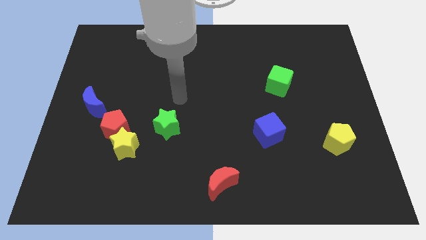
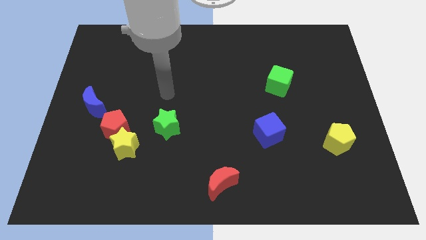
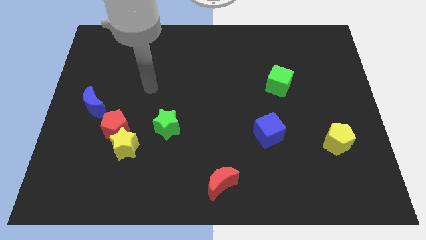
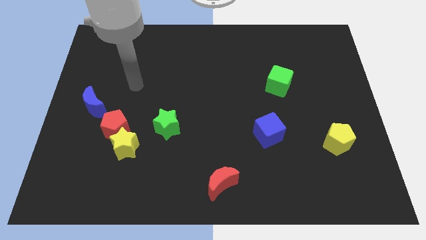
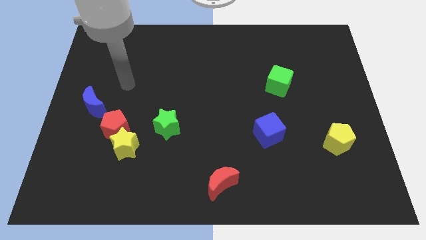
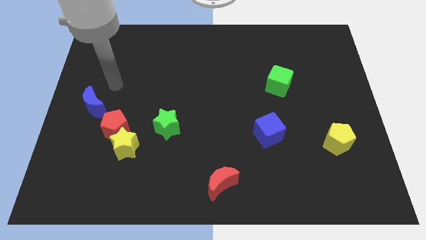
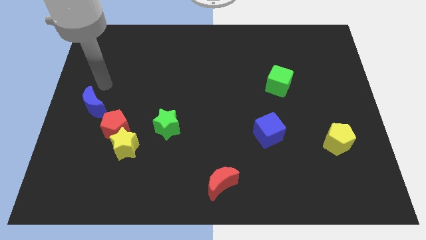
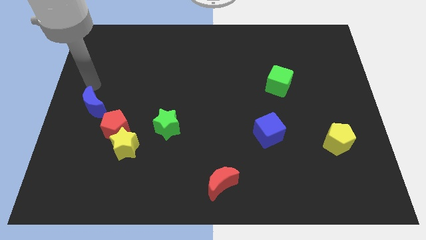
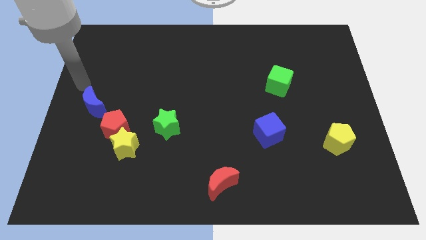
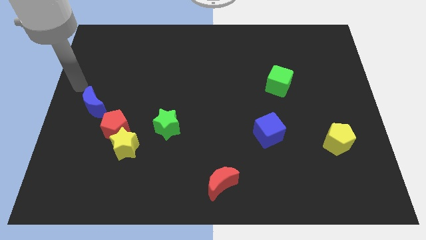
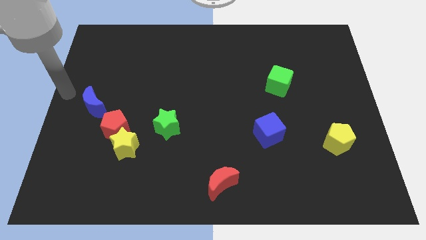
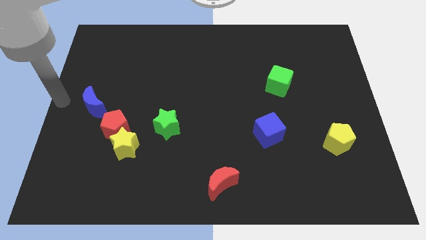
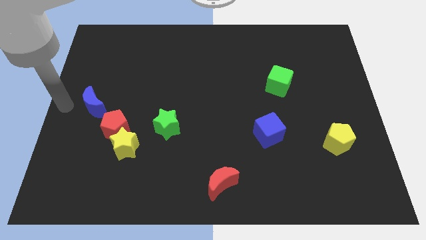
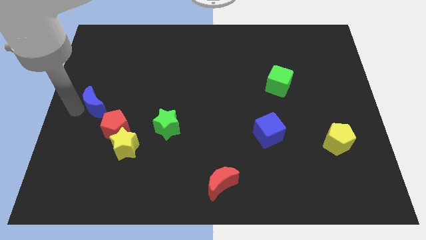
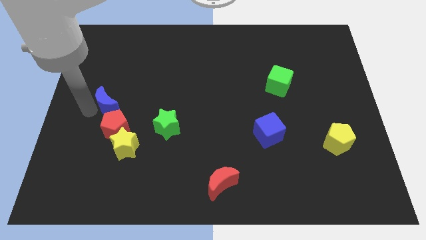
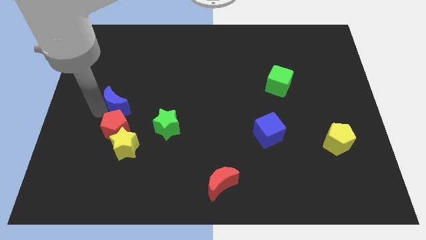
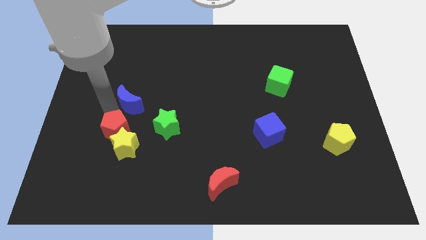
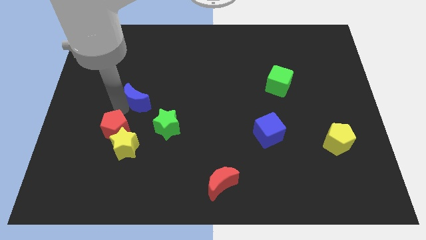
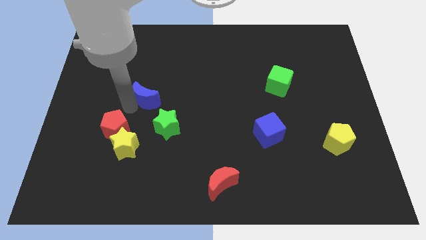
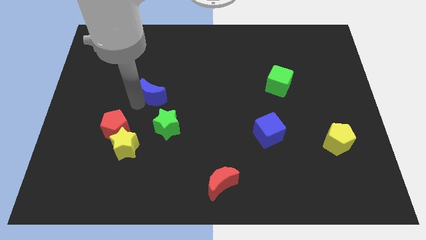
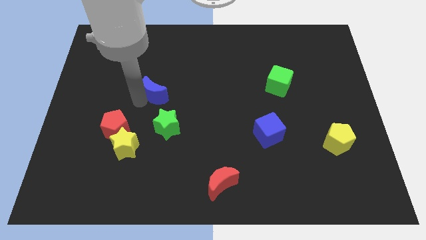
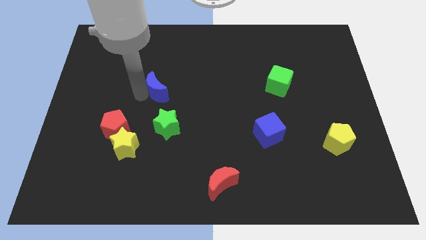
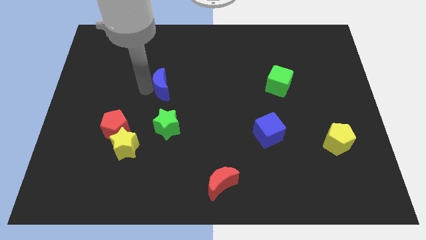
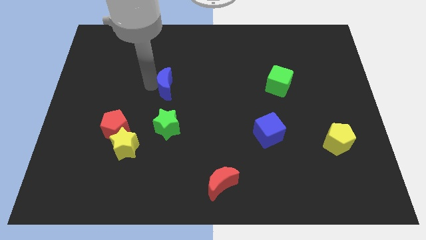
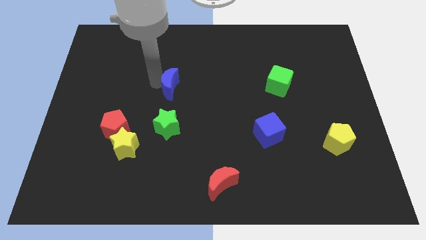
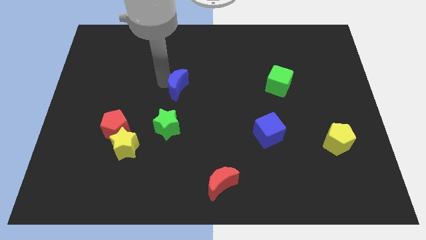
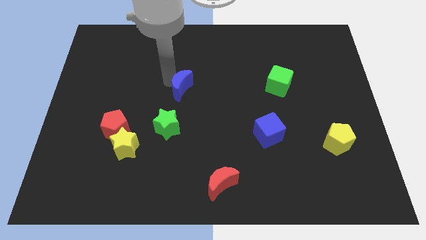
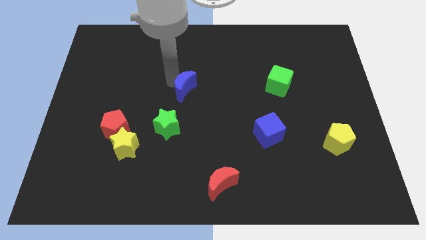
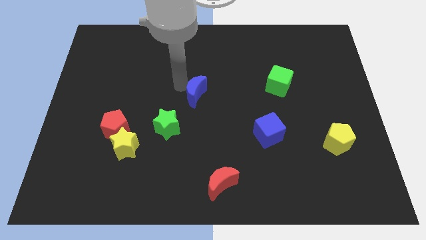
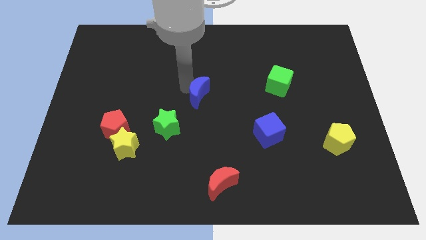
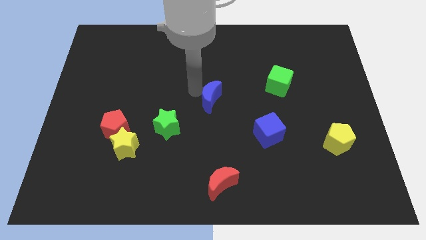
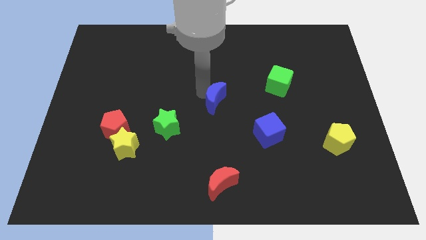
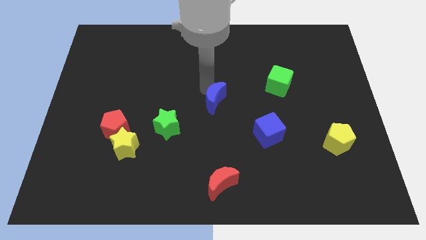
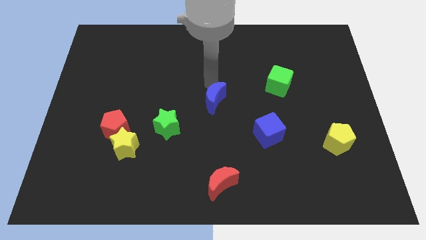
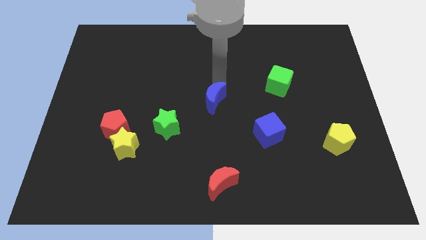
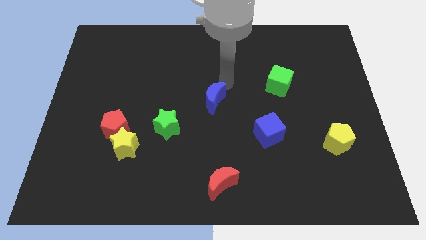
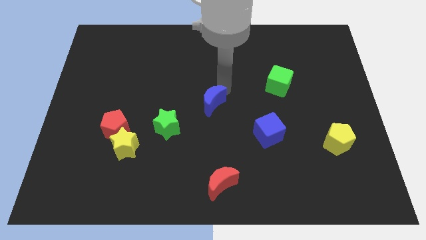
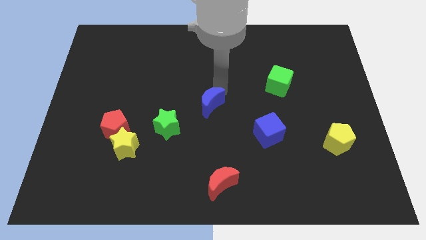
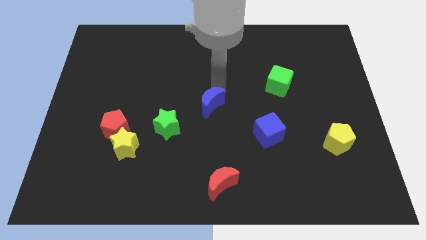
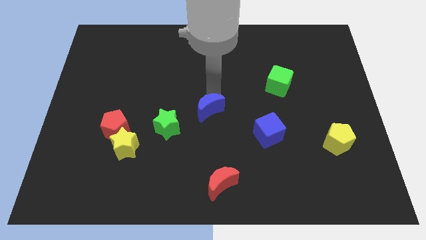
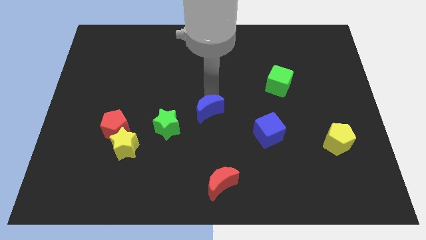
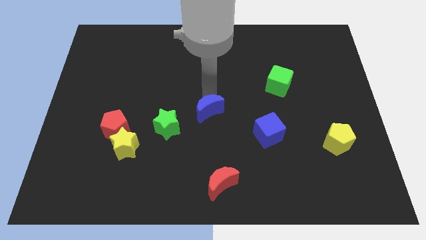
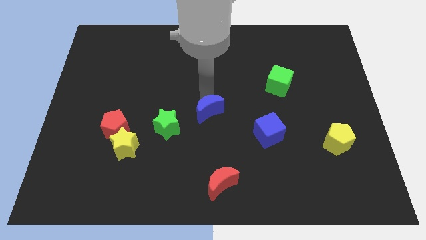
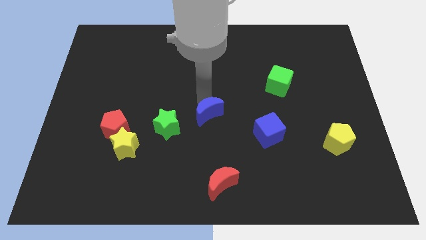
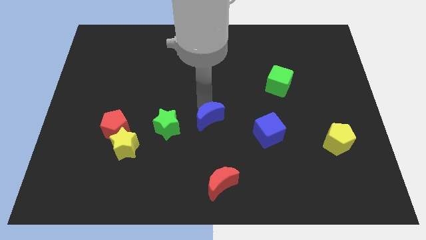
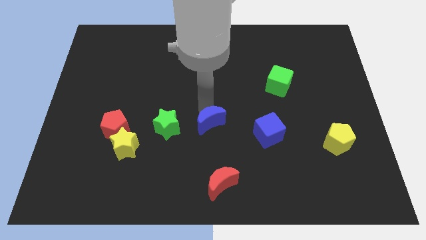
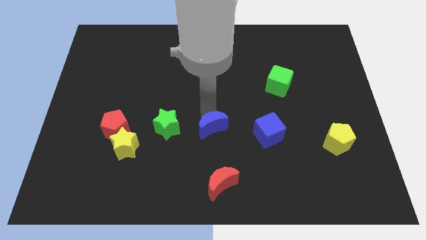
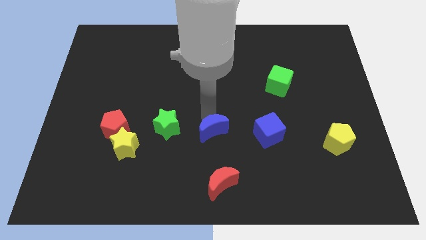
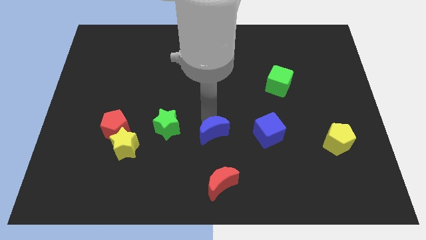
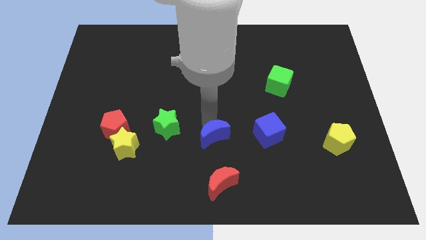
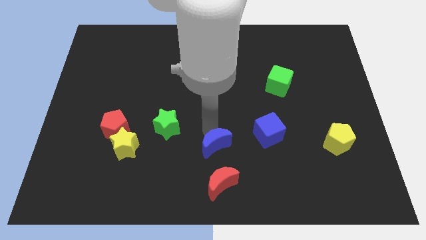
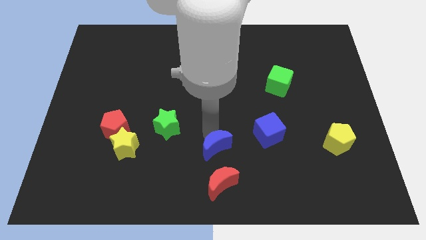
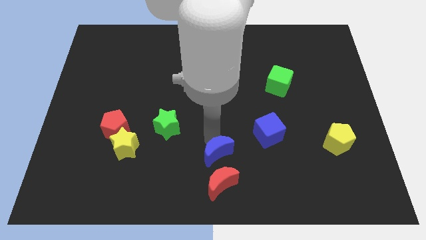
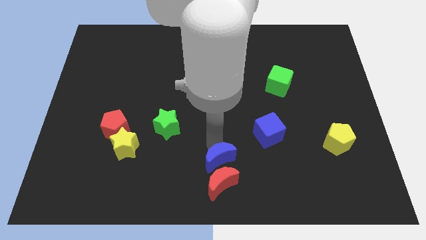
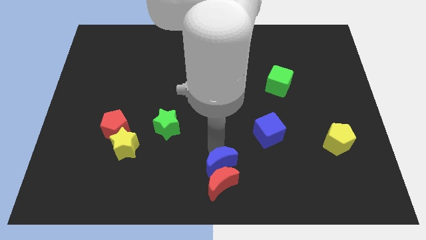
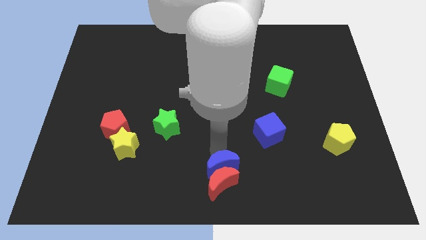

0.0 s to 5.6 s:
move the blue moon towards the red moon

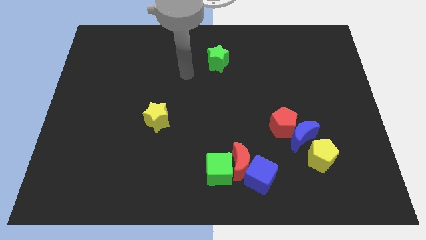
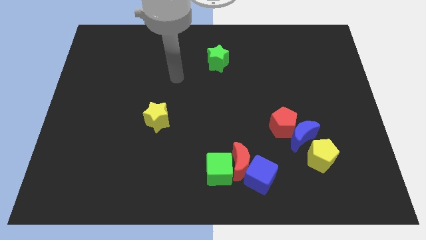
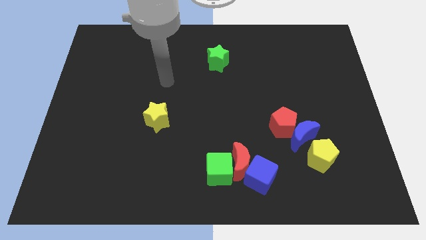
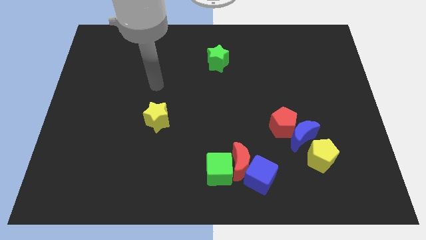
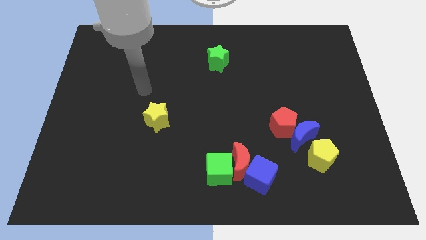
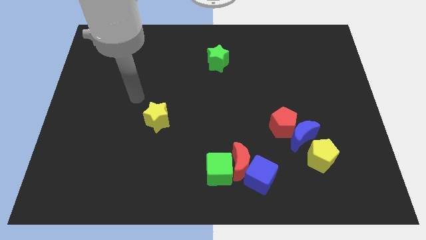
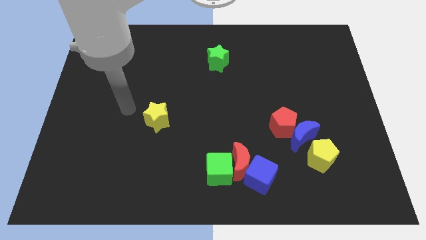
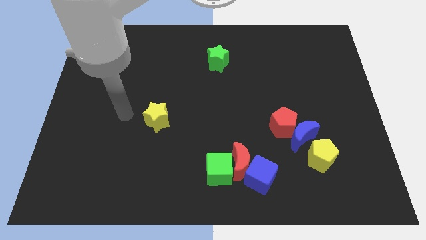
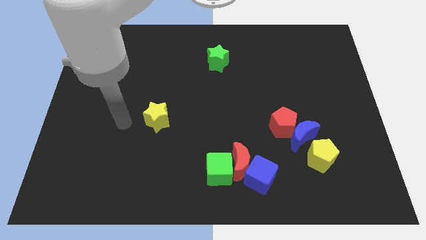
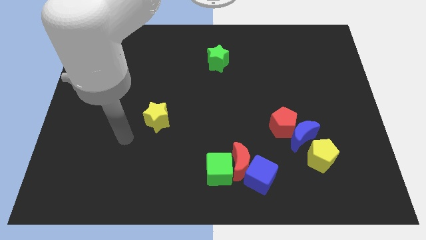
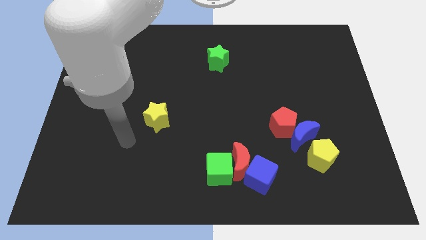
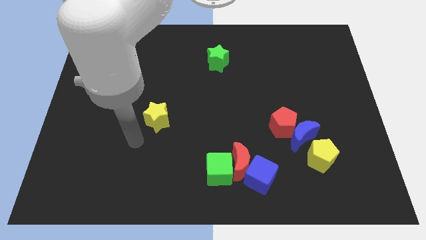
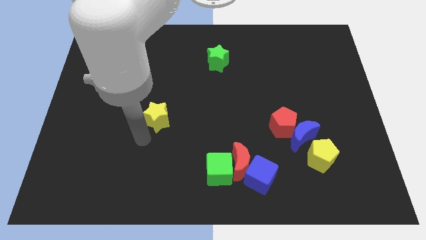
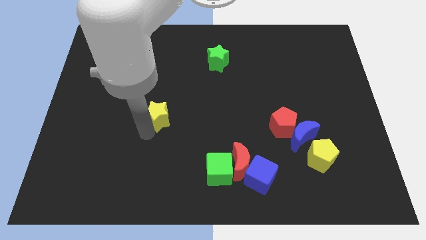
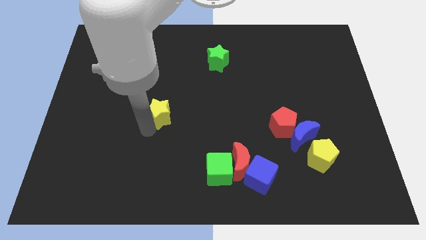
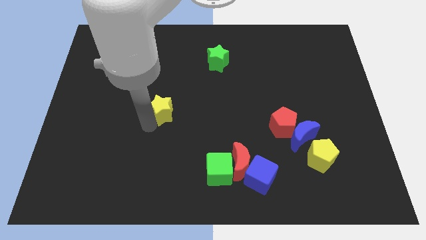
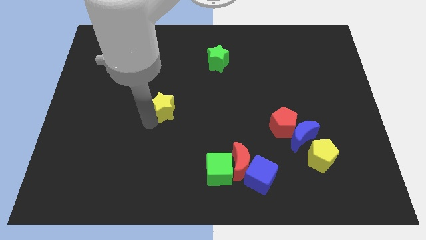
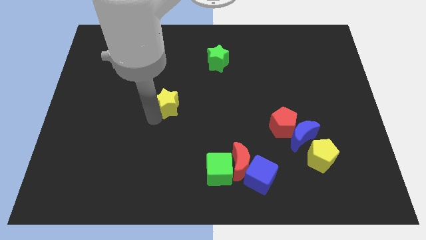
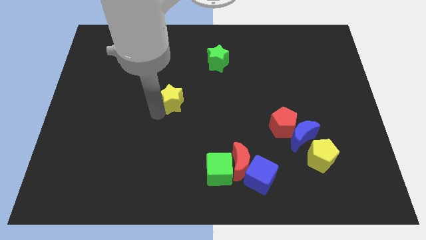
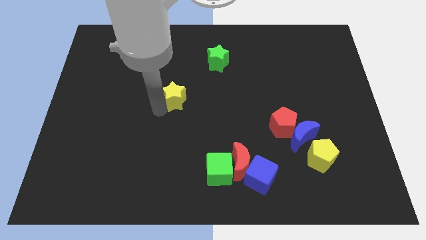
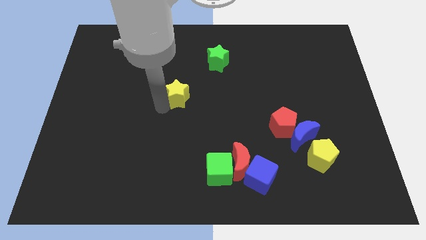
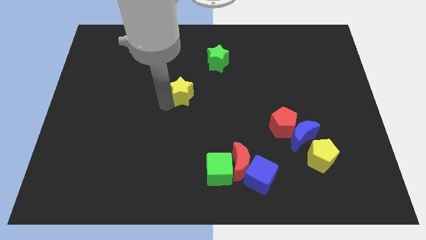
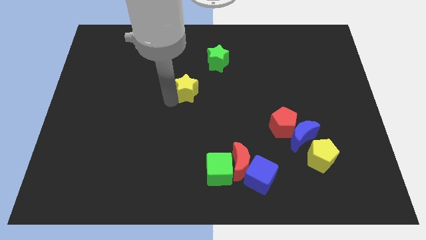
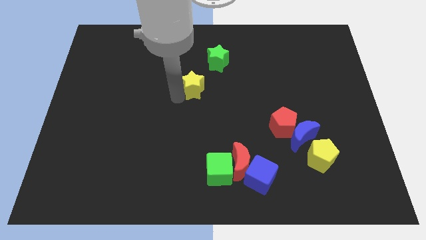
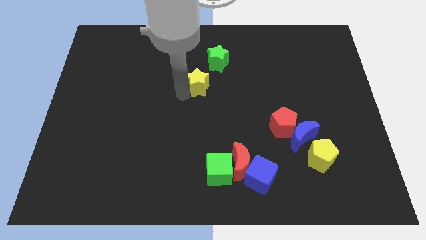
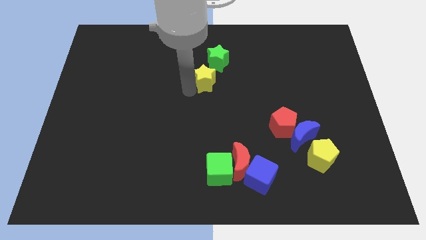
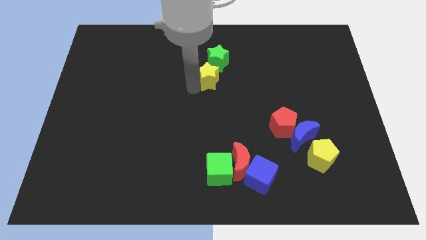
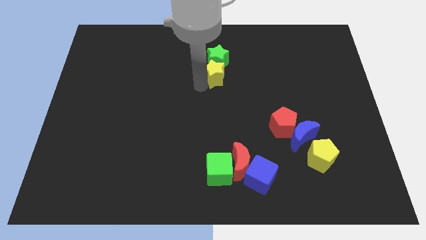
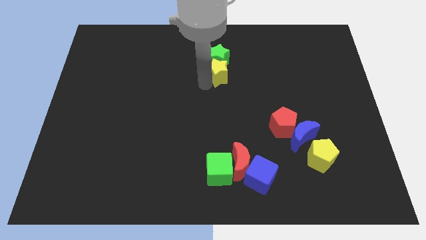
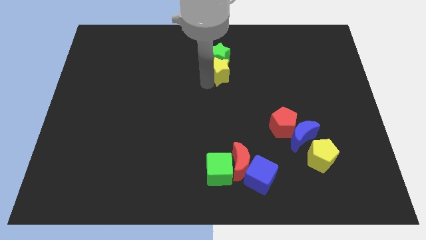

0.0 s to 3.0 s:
move the yellow star towards the green star
